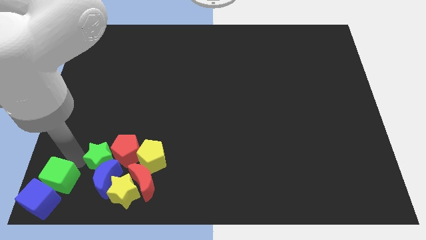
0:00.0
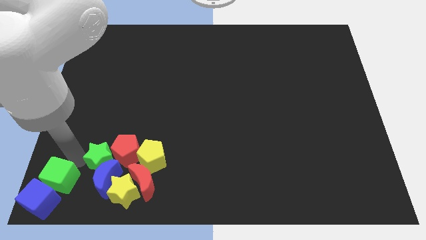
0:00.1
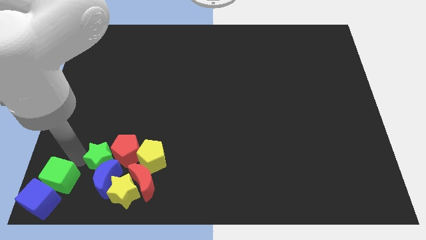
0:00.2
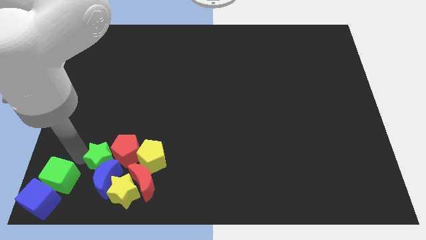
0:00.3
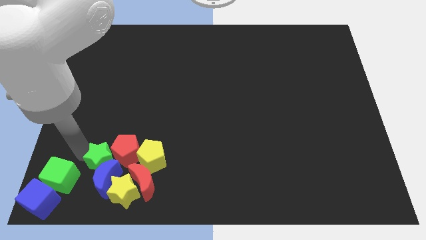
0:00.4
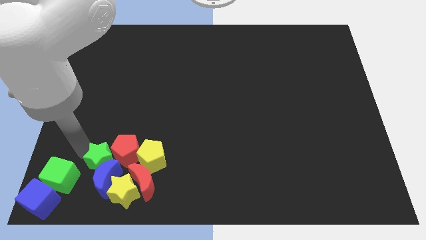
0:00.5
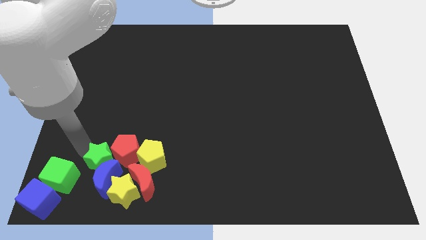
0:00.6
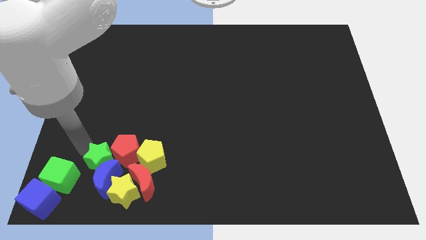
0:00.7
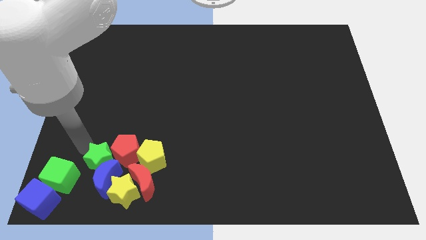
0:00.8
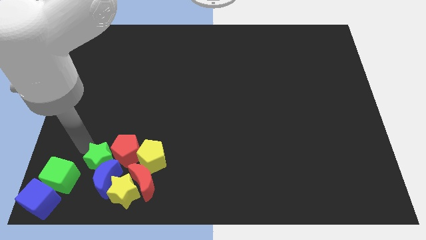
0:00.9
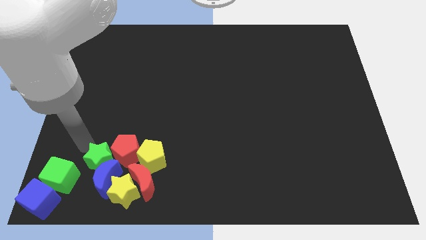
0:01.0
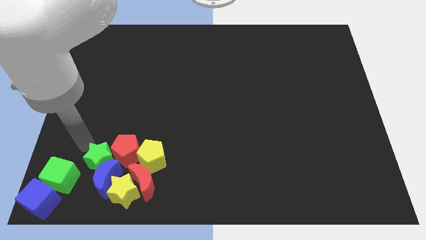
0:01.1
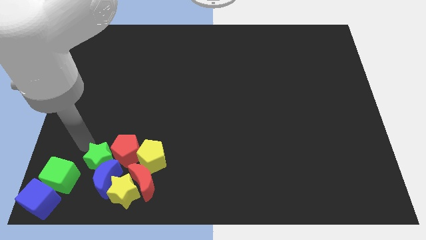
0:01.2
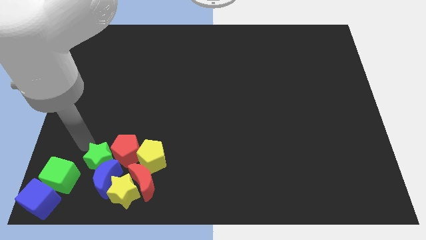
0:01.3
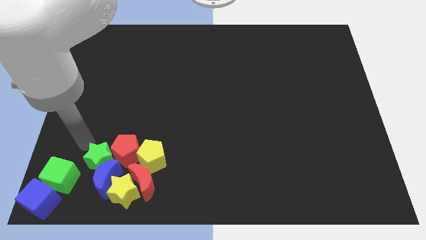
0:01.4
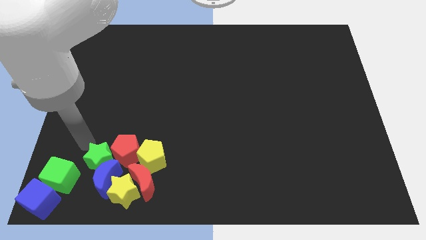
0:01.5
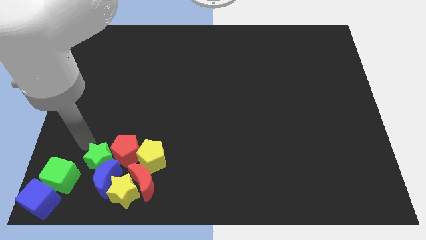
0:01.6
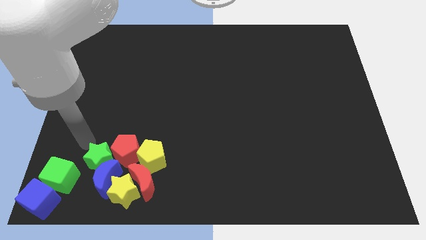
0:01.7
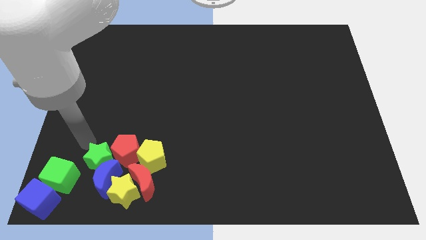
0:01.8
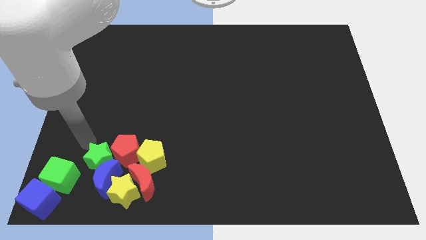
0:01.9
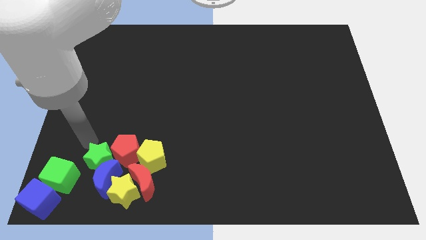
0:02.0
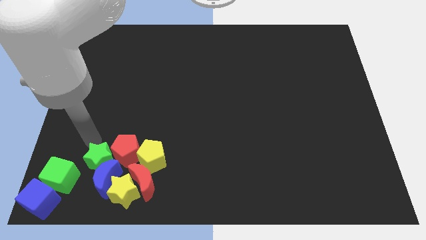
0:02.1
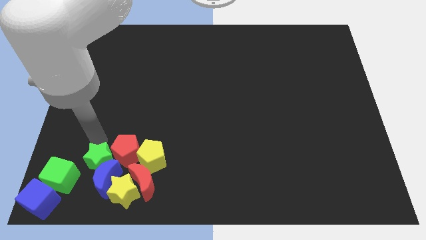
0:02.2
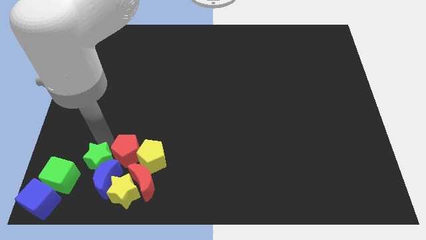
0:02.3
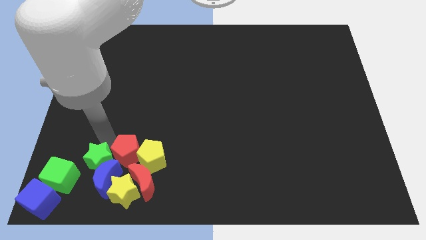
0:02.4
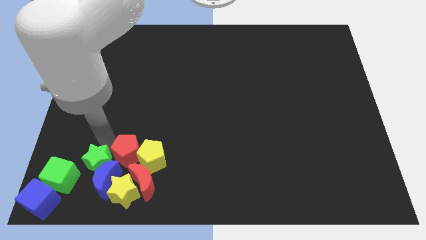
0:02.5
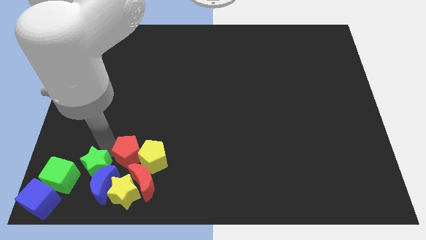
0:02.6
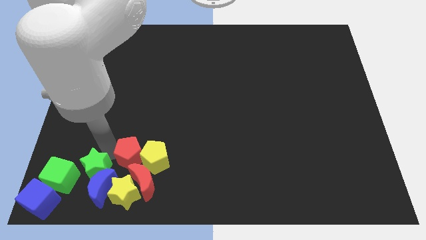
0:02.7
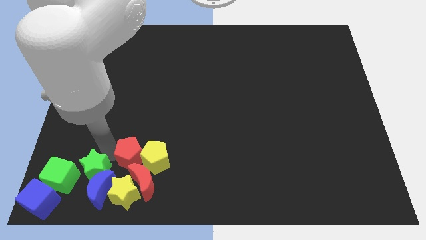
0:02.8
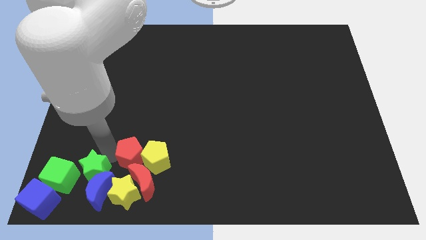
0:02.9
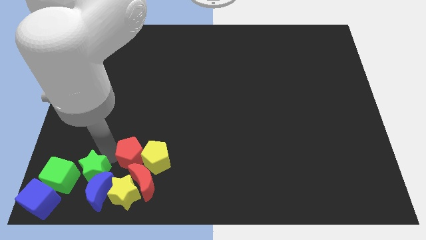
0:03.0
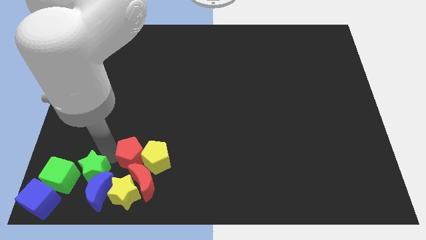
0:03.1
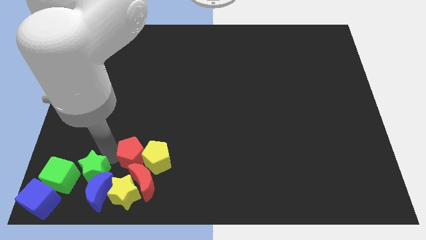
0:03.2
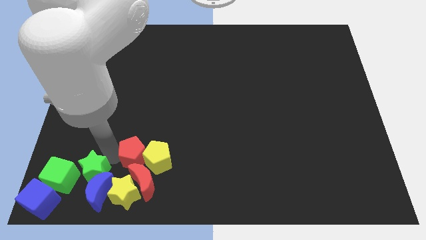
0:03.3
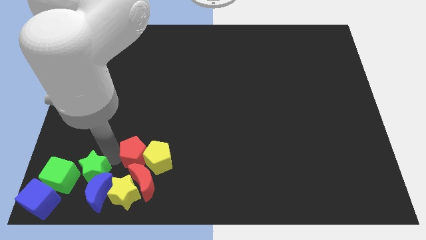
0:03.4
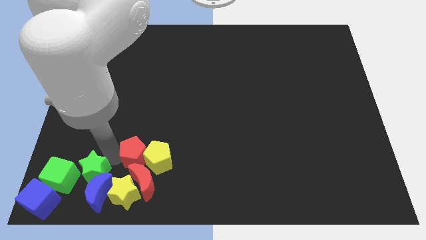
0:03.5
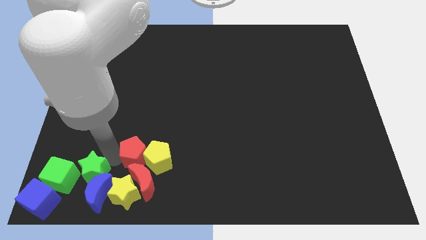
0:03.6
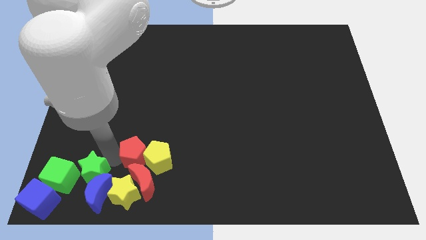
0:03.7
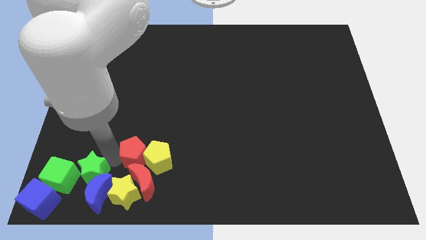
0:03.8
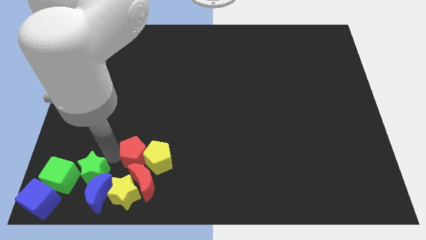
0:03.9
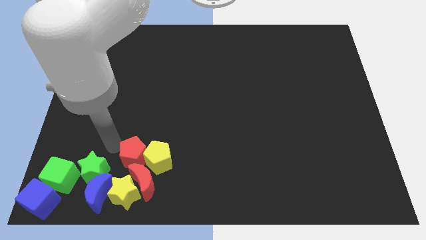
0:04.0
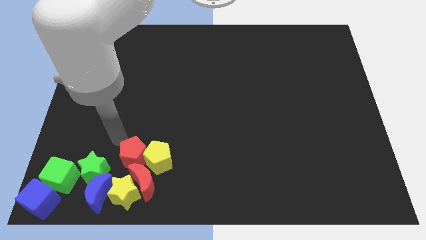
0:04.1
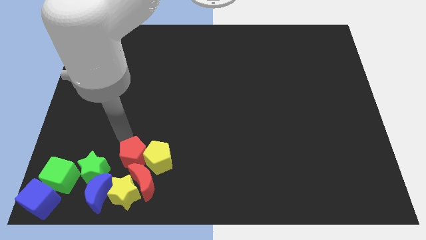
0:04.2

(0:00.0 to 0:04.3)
push the green star and blue moon towards the bottom side

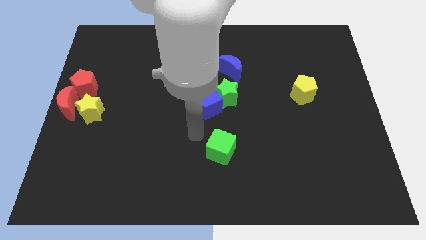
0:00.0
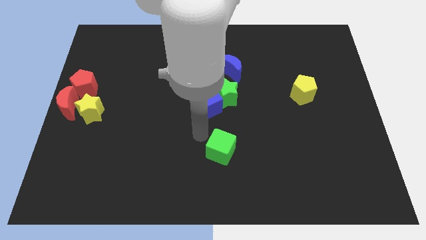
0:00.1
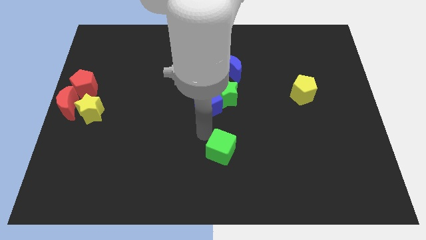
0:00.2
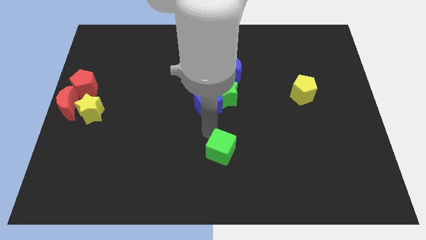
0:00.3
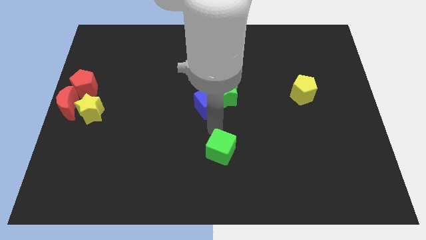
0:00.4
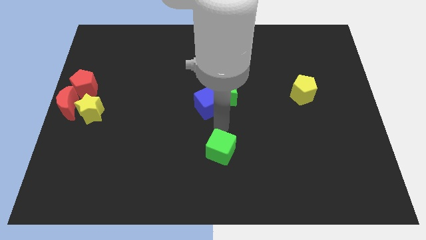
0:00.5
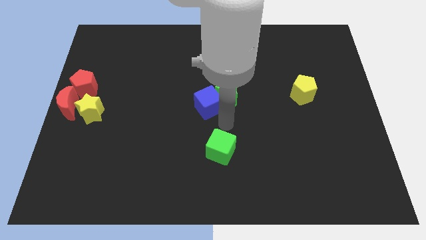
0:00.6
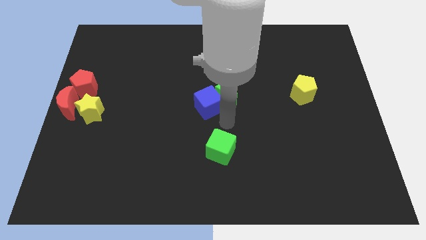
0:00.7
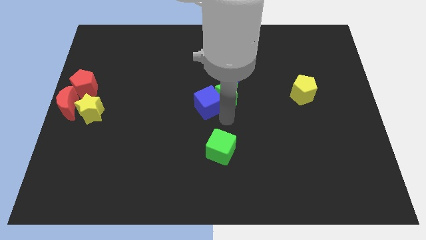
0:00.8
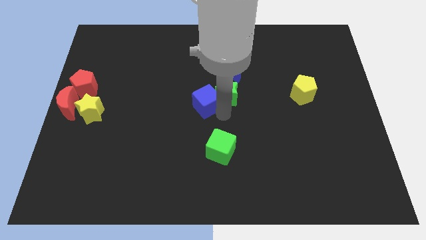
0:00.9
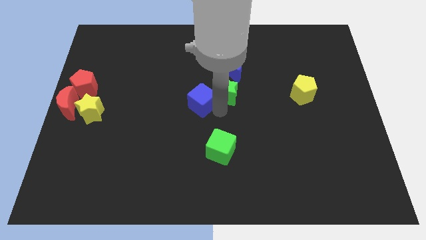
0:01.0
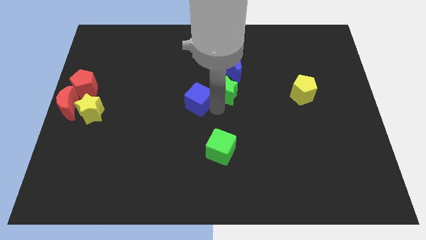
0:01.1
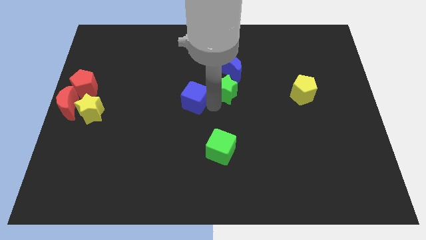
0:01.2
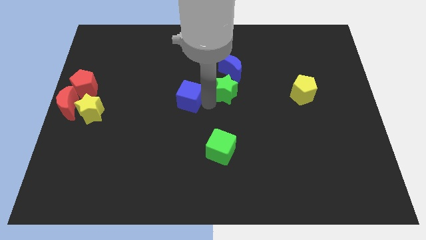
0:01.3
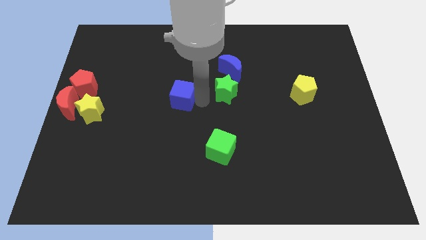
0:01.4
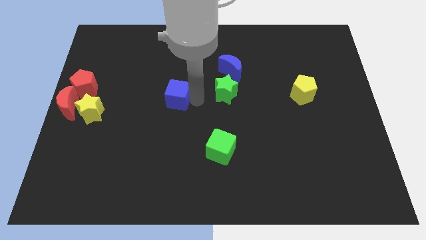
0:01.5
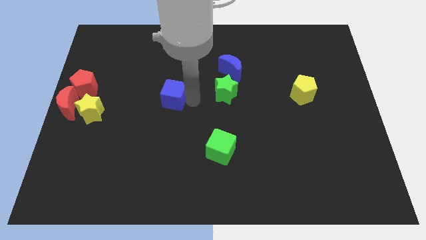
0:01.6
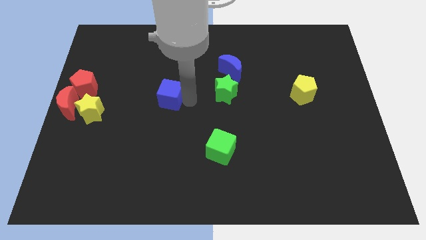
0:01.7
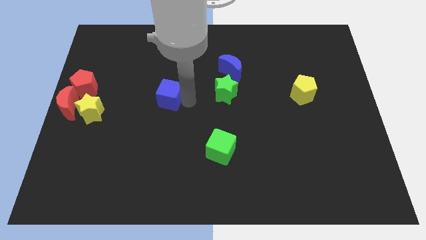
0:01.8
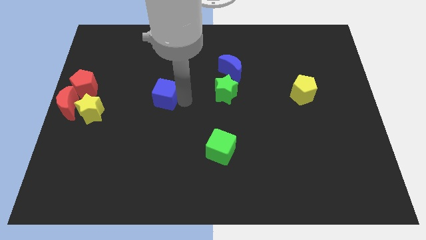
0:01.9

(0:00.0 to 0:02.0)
move the blue cube away from the green star

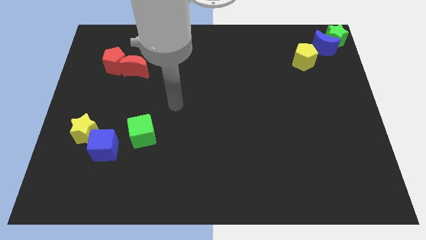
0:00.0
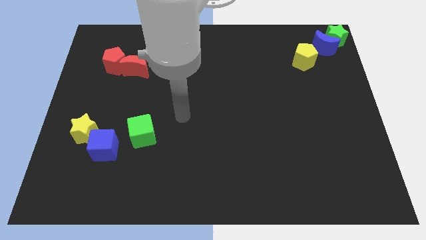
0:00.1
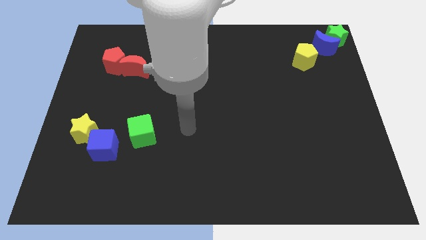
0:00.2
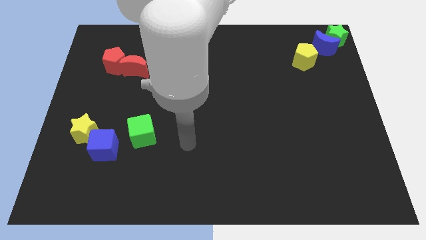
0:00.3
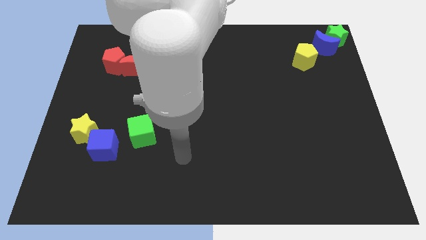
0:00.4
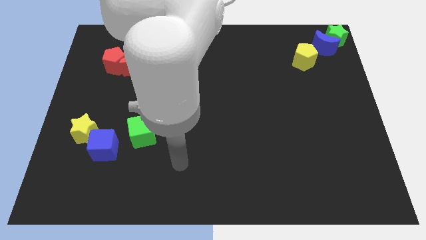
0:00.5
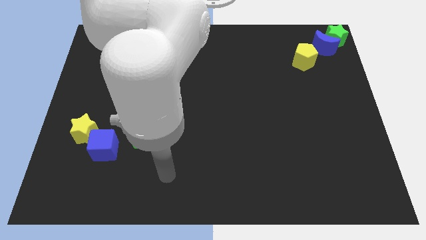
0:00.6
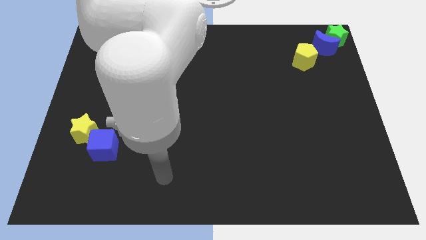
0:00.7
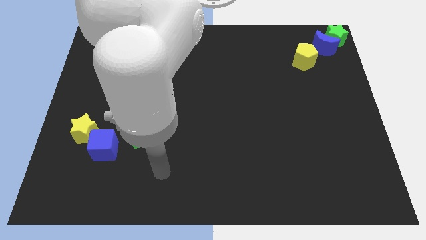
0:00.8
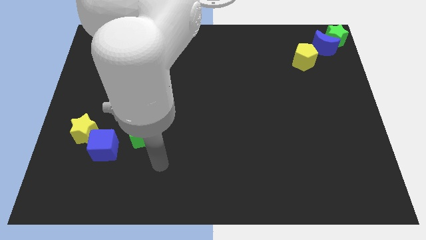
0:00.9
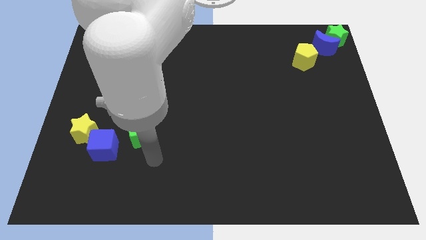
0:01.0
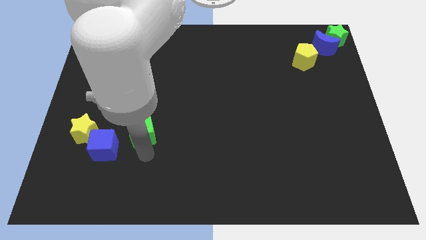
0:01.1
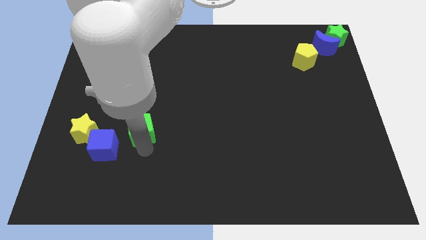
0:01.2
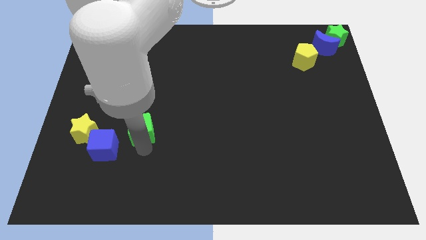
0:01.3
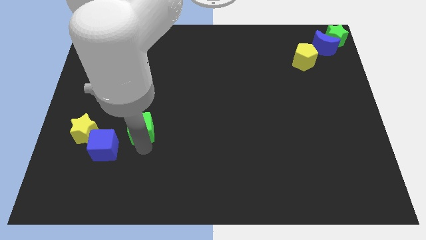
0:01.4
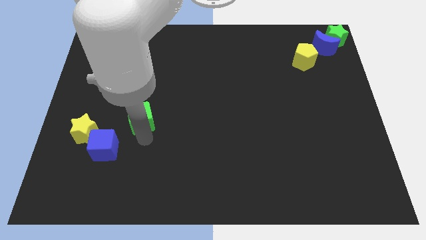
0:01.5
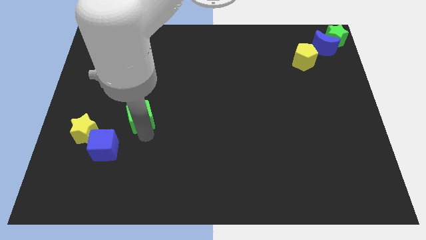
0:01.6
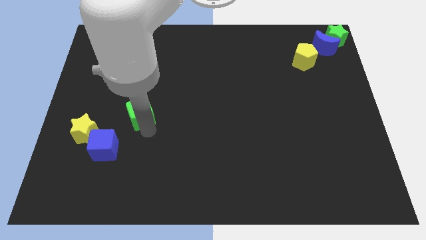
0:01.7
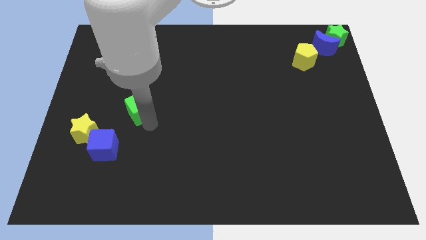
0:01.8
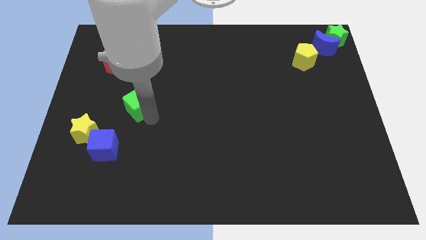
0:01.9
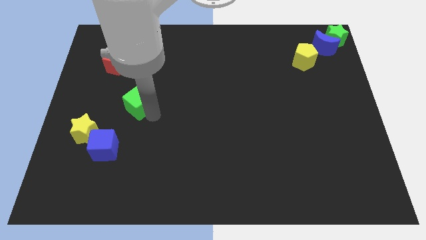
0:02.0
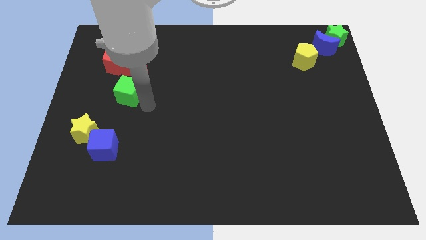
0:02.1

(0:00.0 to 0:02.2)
place the green cube in between the blue cube and red moon

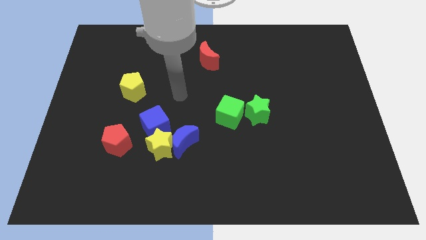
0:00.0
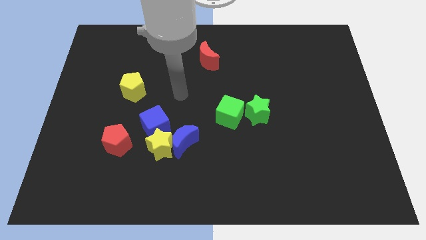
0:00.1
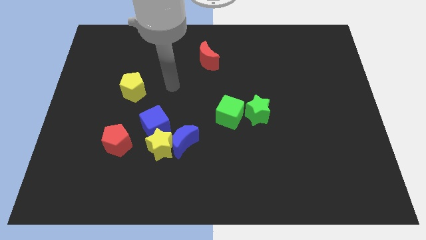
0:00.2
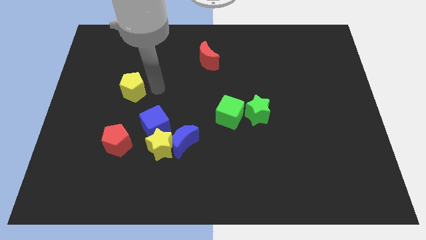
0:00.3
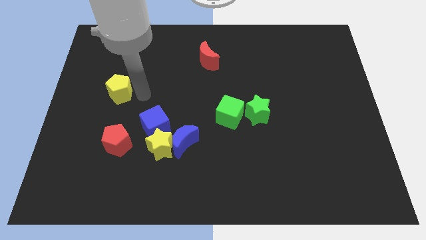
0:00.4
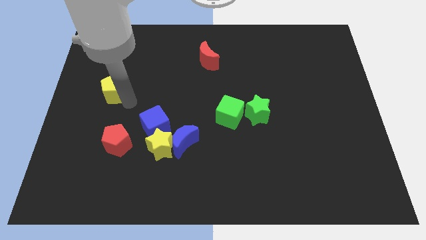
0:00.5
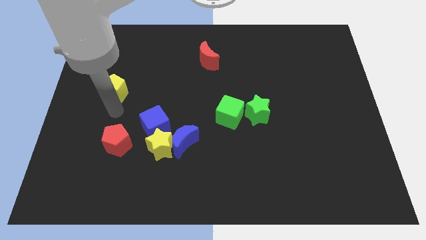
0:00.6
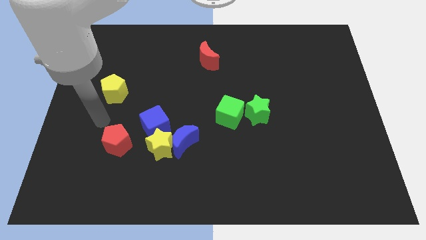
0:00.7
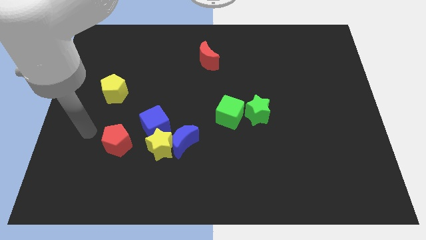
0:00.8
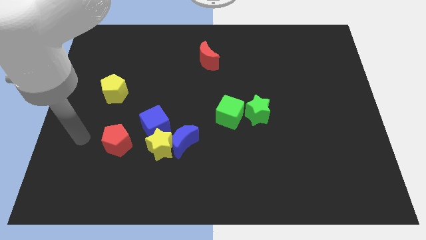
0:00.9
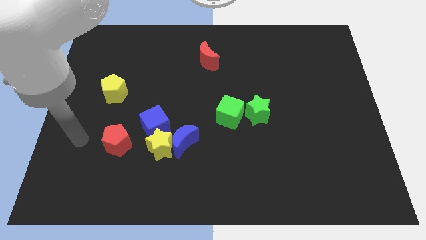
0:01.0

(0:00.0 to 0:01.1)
place the arm left to the red pentagon
